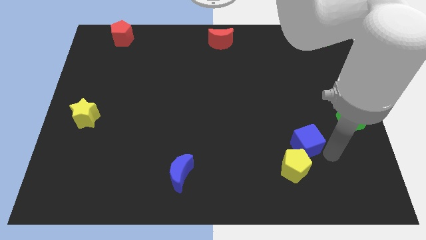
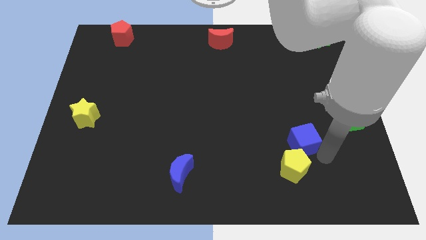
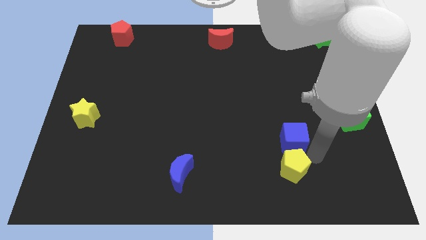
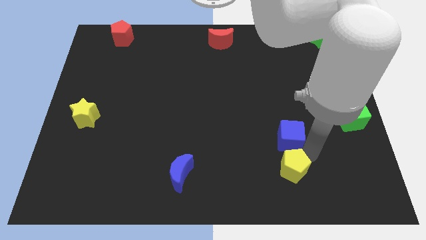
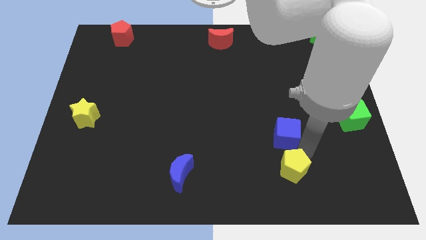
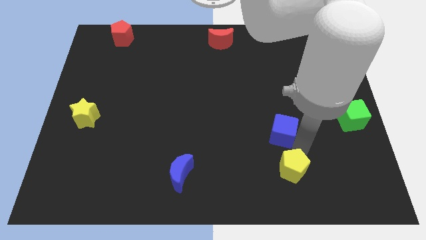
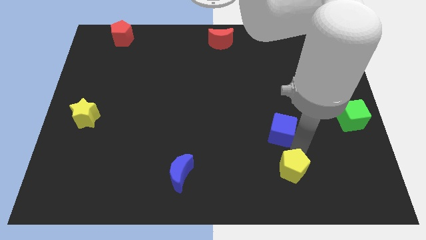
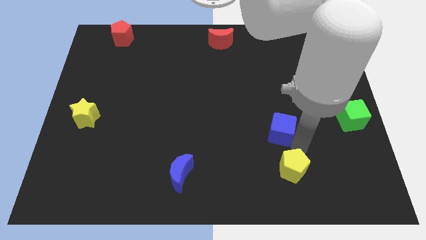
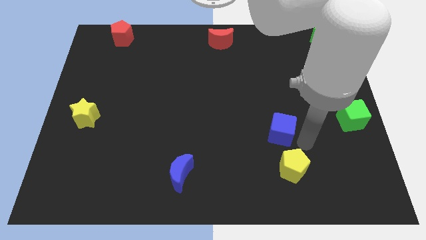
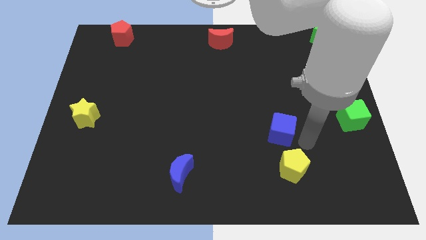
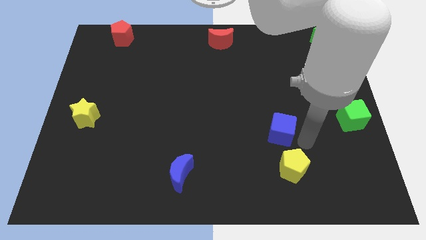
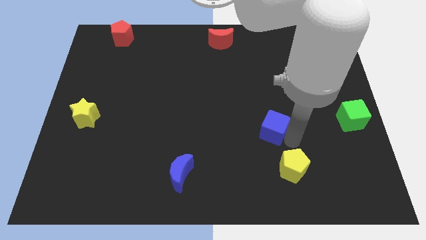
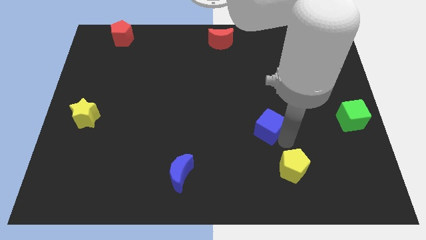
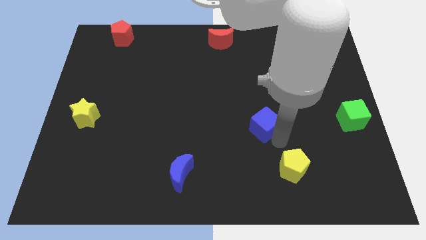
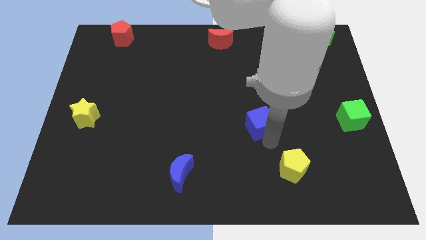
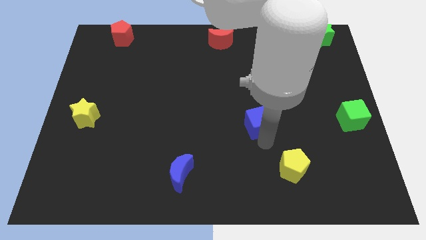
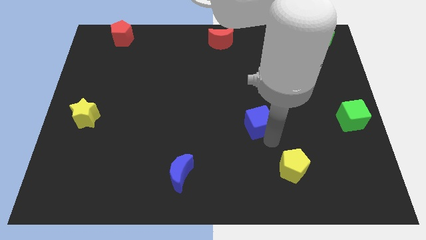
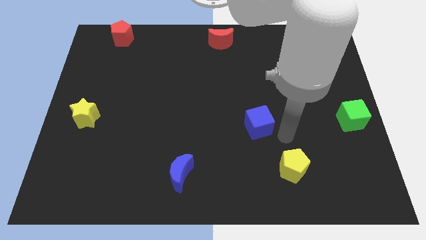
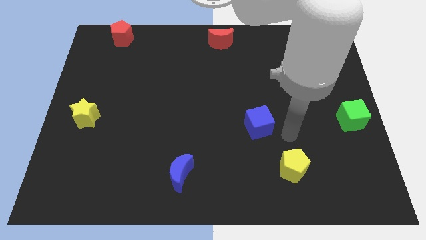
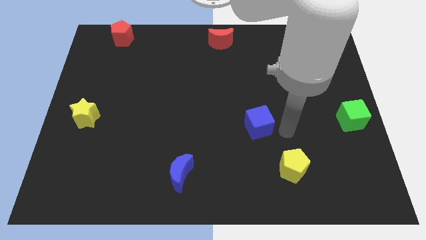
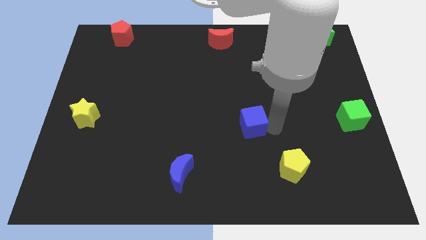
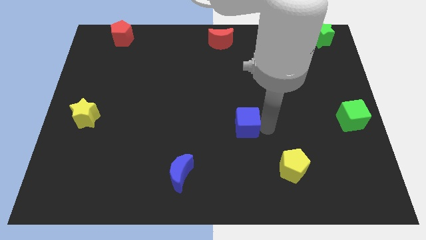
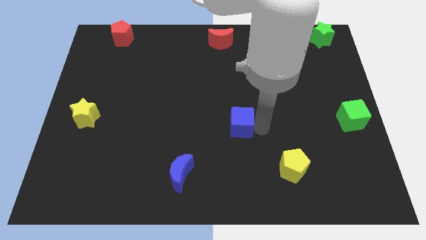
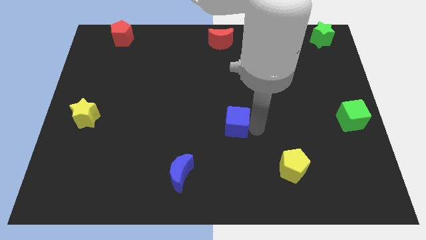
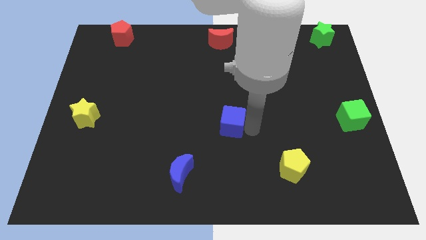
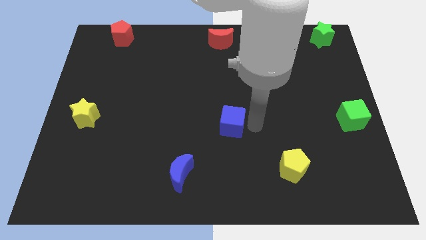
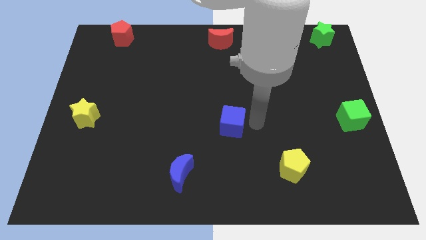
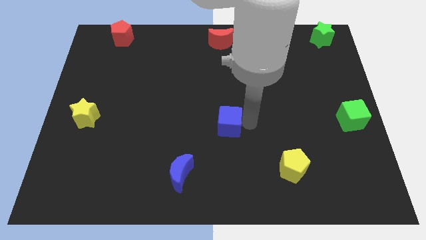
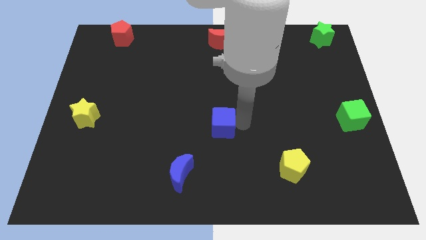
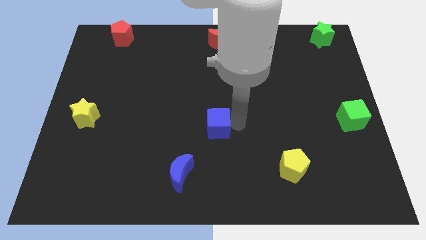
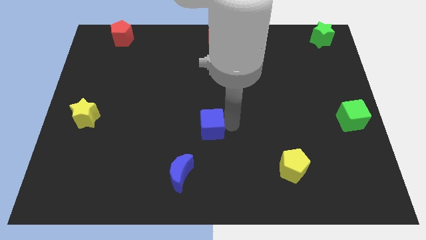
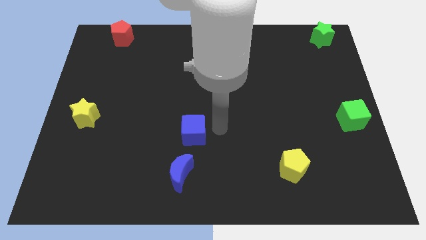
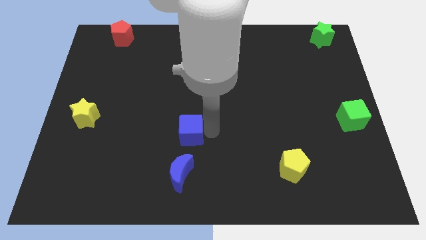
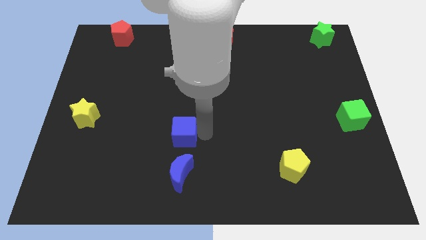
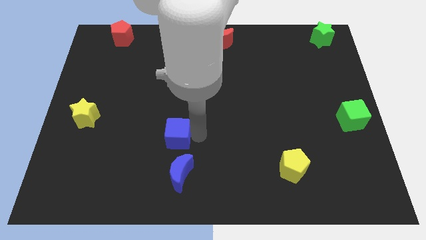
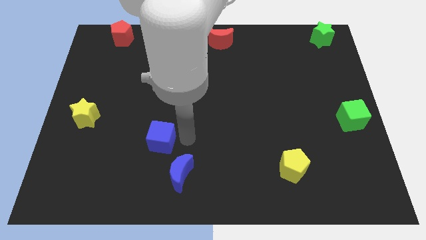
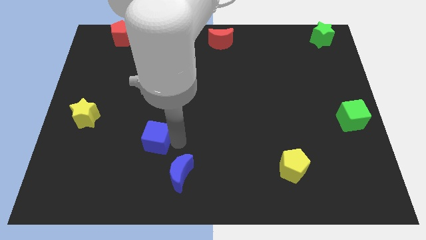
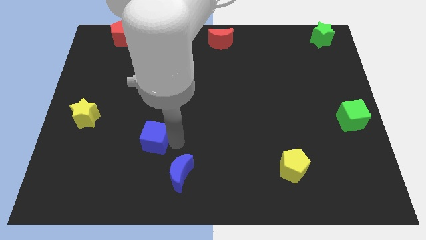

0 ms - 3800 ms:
move the blue cube towards left

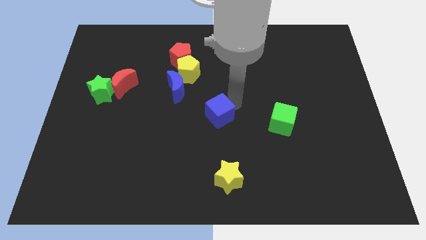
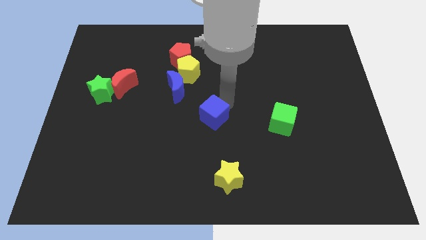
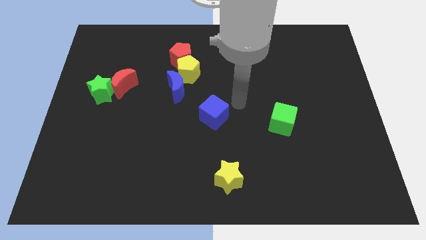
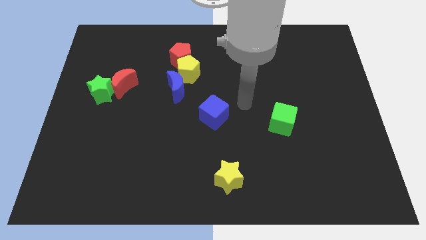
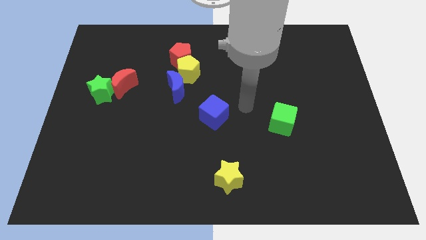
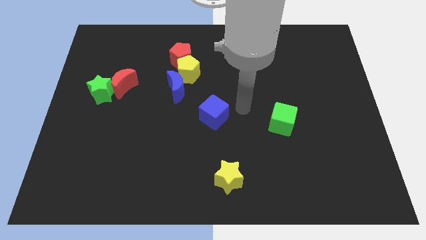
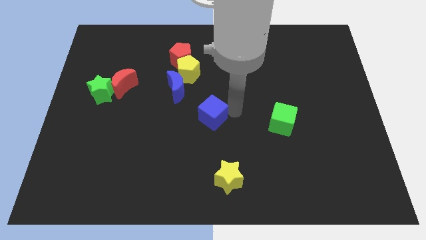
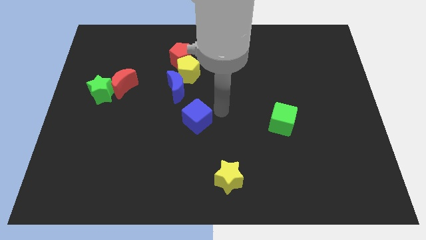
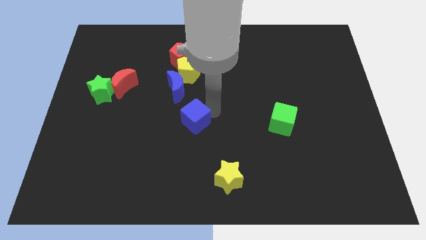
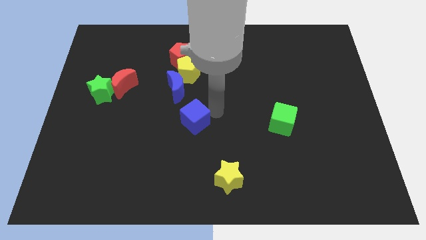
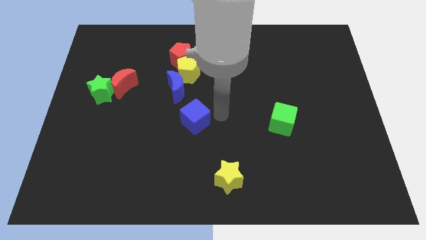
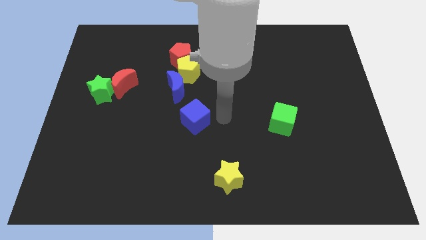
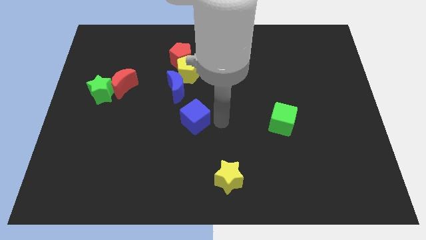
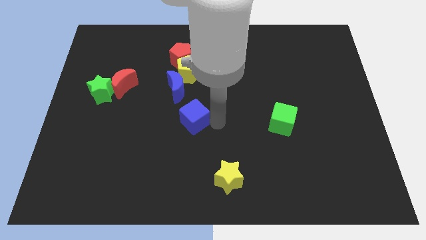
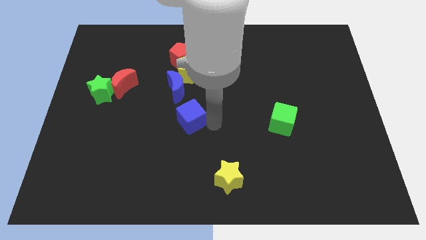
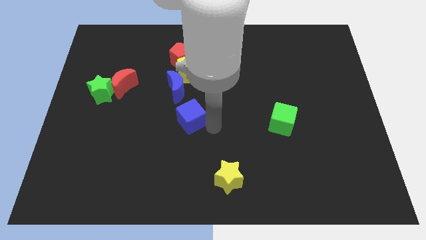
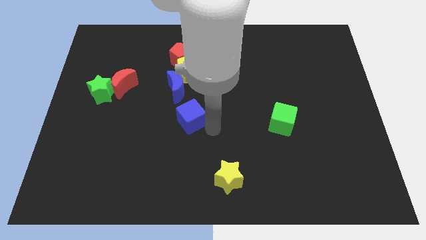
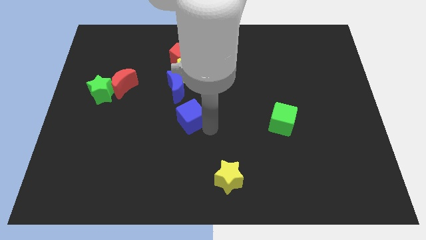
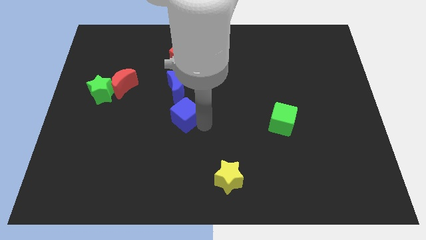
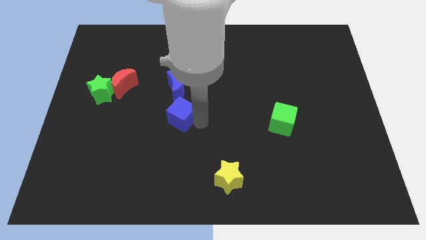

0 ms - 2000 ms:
push the blue cube to the bottom of the blue crescent

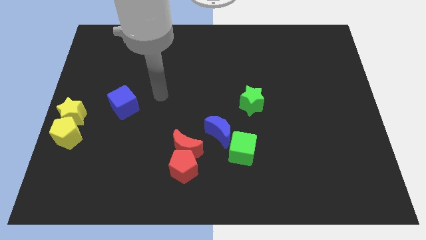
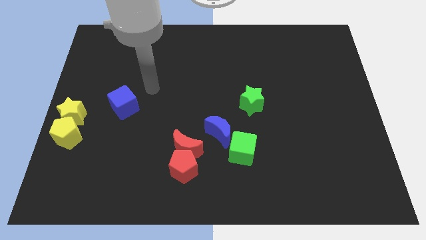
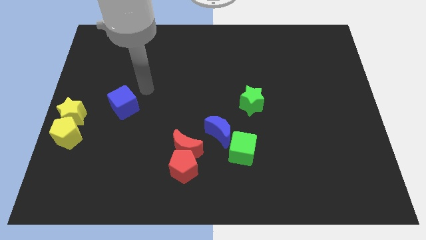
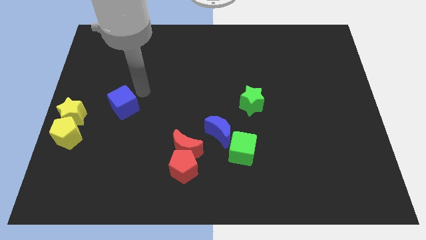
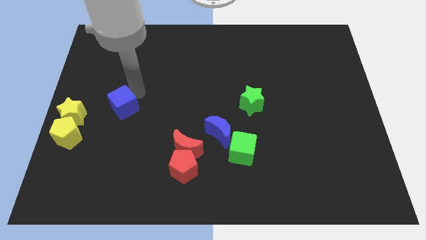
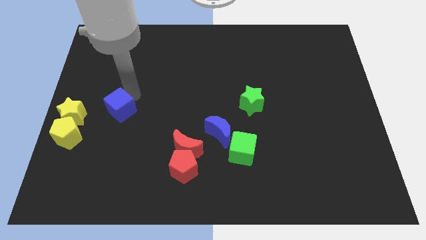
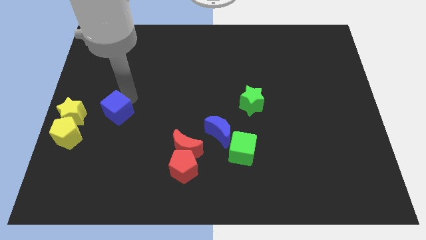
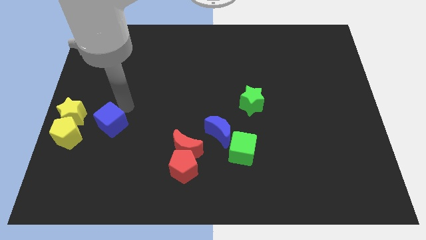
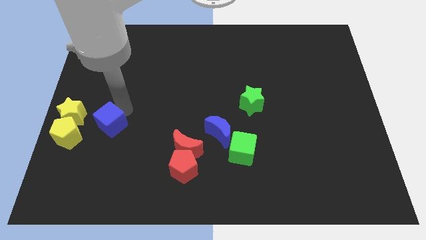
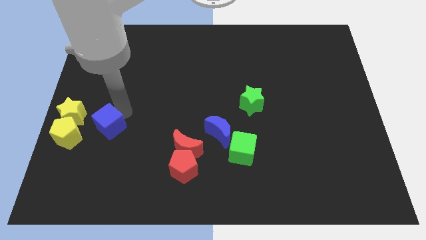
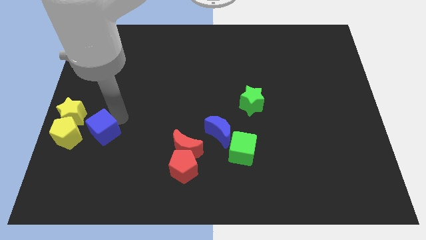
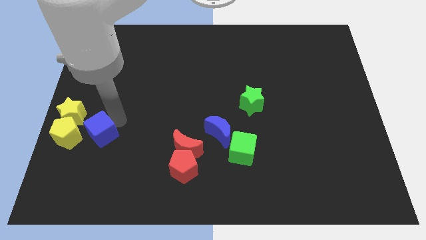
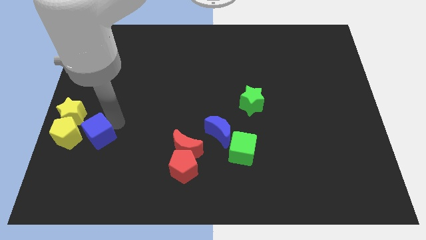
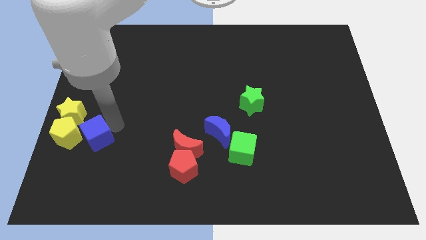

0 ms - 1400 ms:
put the blue cube to the right side of yellow pentagon

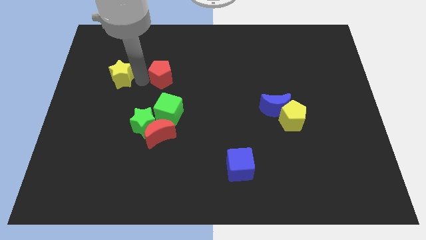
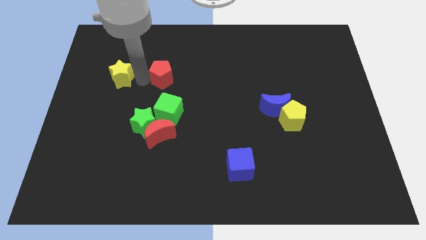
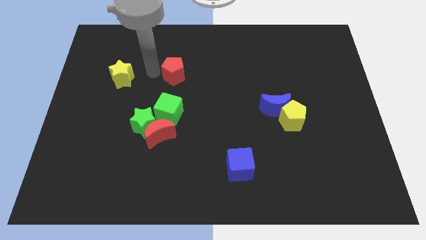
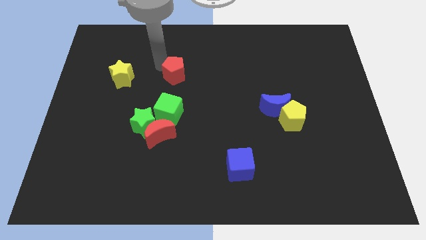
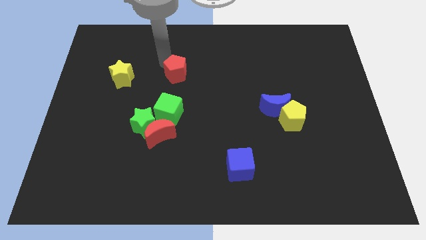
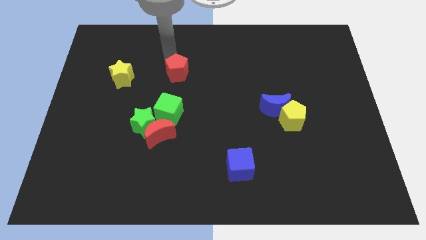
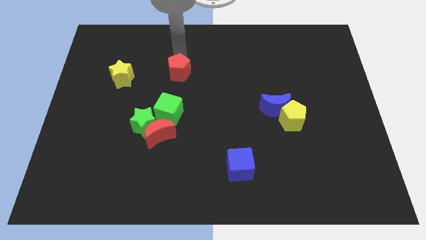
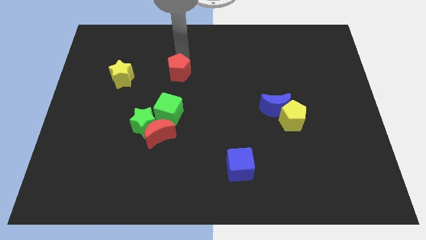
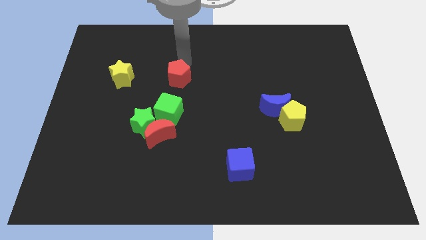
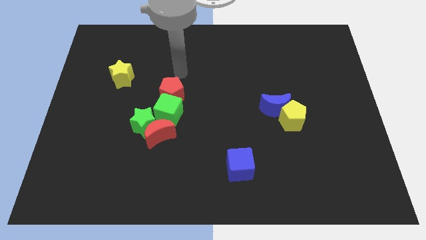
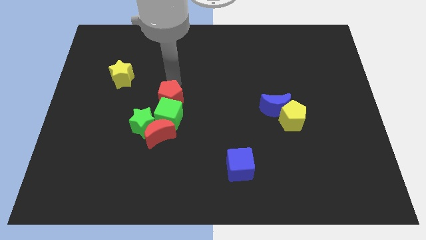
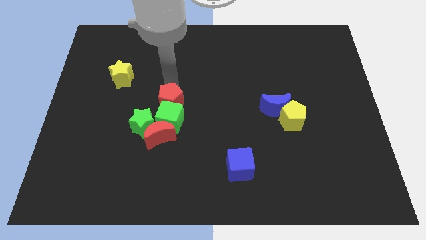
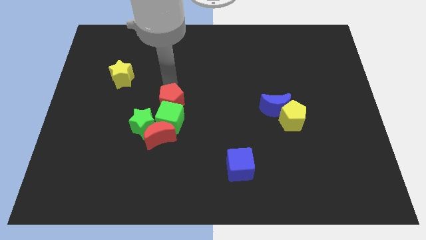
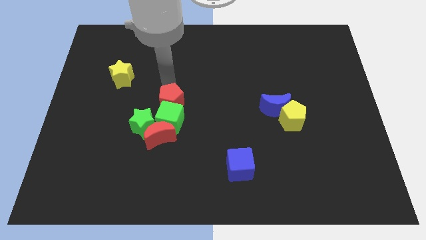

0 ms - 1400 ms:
push the red pentagon into the green cube

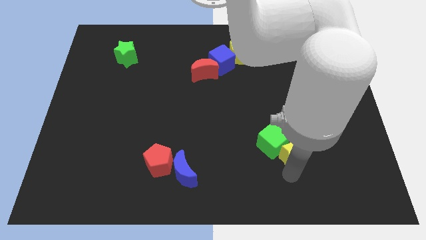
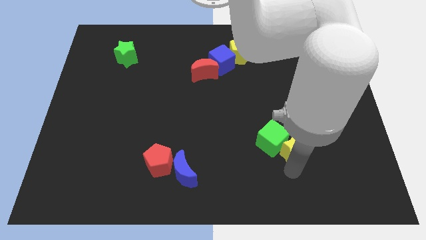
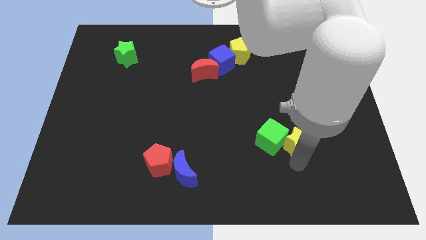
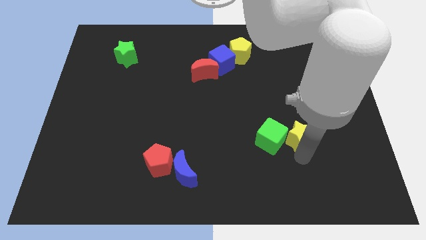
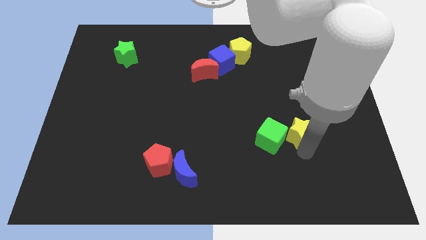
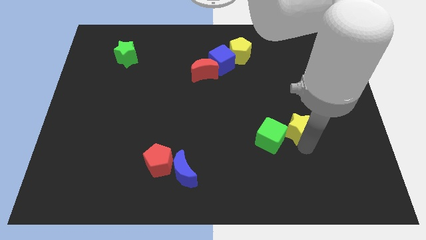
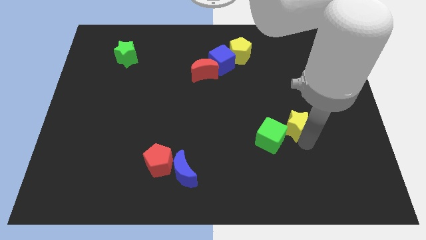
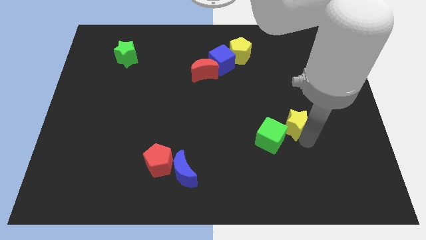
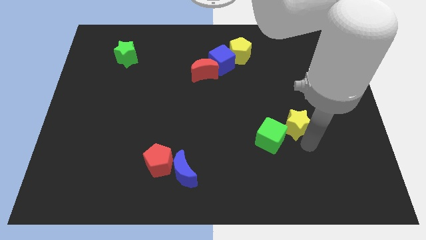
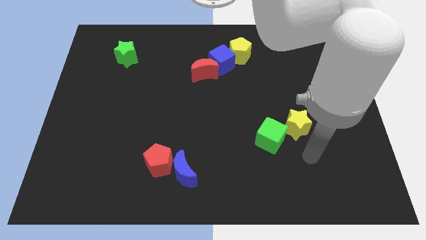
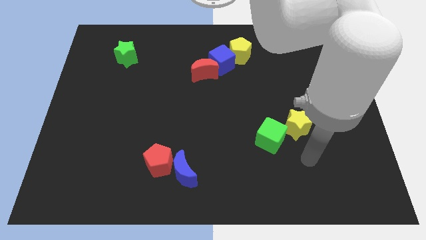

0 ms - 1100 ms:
push the yellow star diagonal to the green cube
